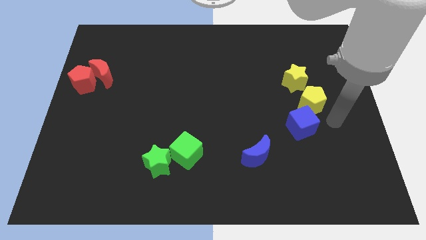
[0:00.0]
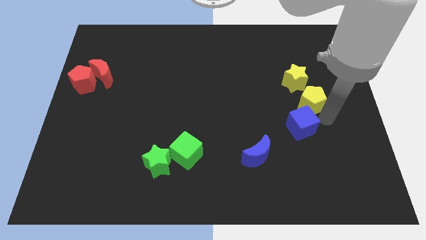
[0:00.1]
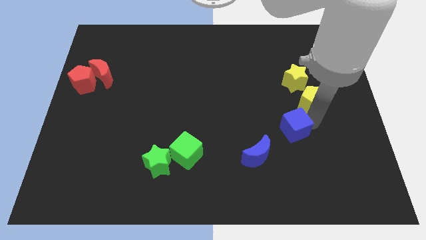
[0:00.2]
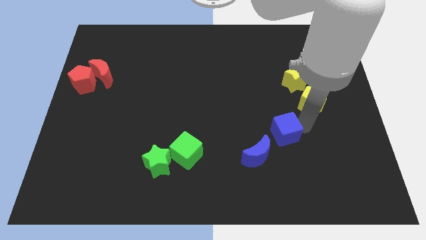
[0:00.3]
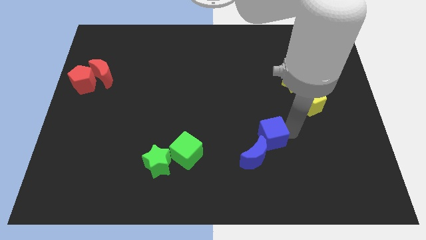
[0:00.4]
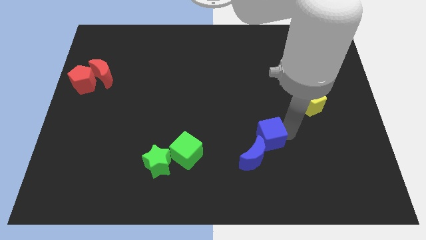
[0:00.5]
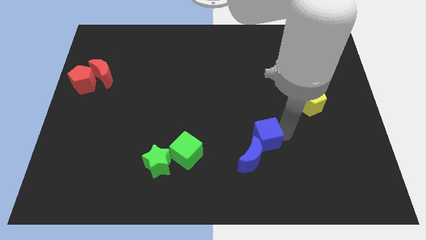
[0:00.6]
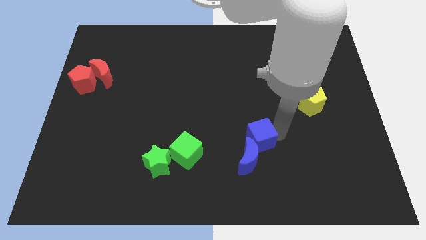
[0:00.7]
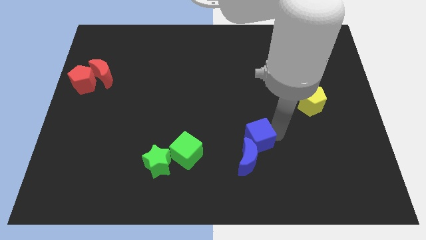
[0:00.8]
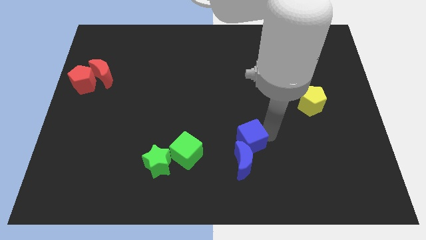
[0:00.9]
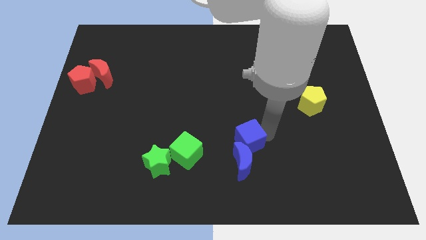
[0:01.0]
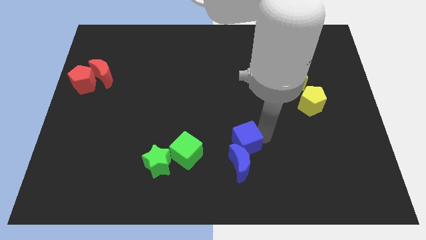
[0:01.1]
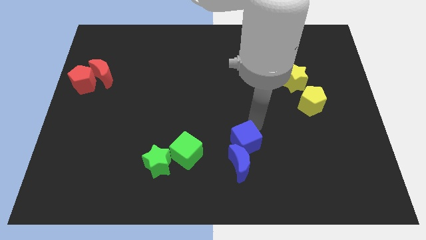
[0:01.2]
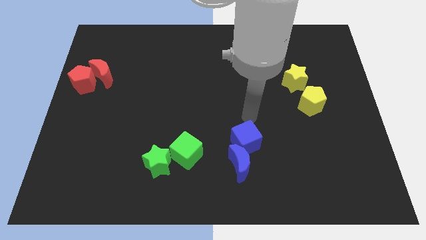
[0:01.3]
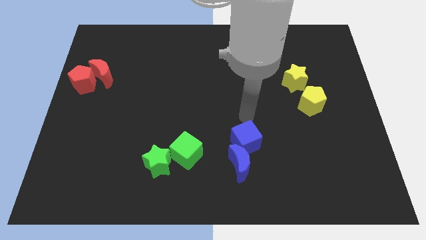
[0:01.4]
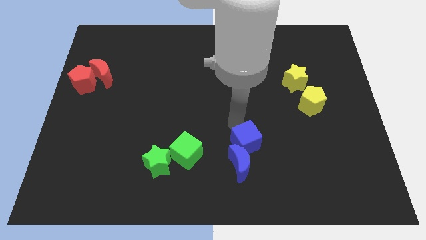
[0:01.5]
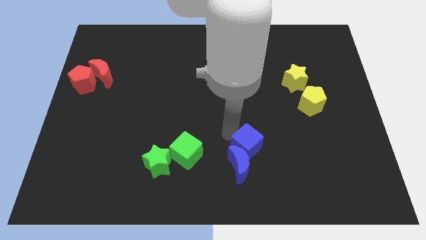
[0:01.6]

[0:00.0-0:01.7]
group up the blue blocks adjacent to the group of green blocks

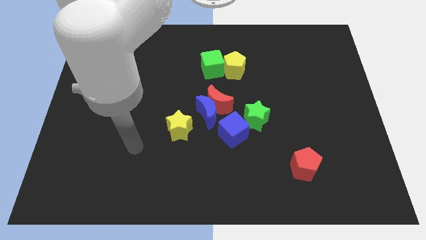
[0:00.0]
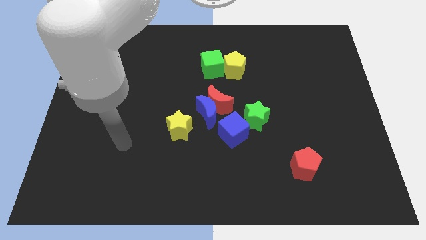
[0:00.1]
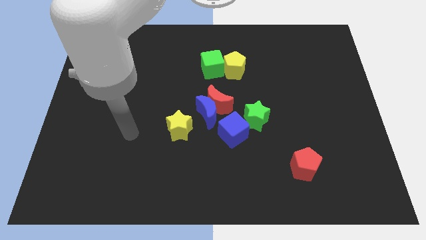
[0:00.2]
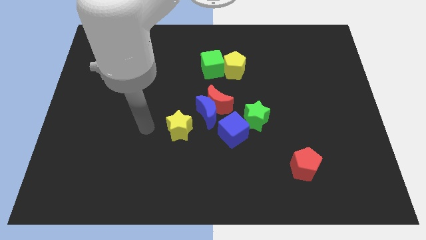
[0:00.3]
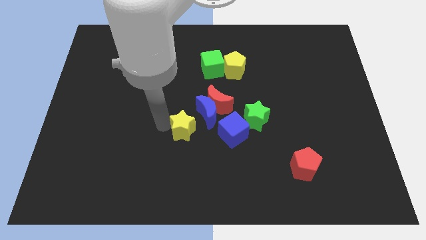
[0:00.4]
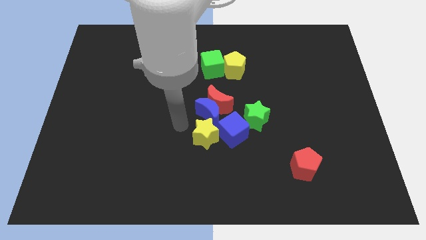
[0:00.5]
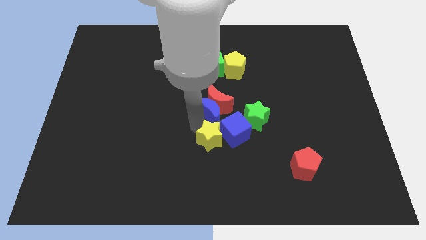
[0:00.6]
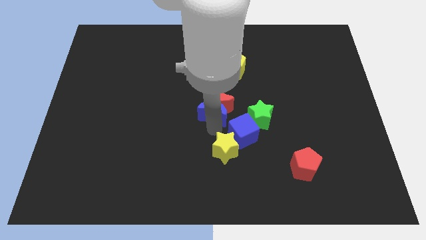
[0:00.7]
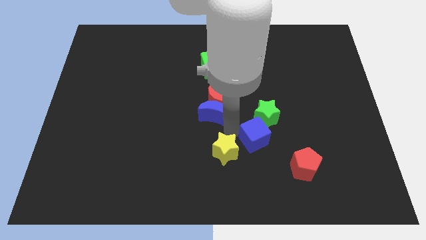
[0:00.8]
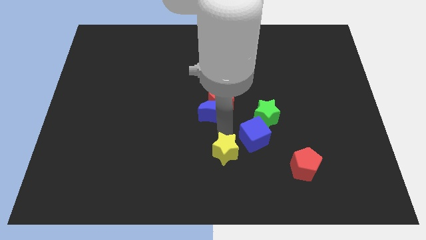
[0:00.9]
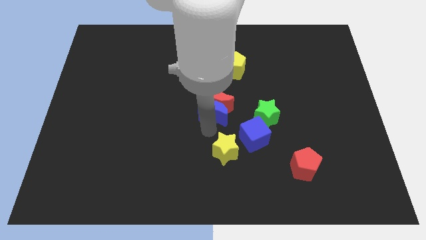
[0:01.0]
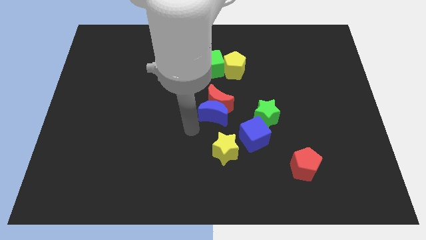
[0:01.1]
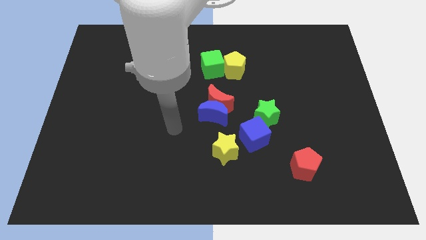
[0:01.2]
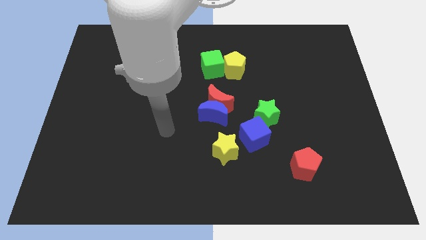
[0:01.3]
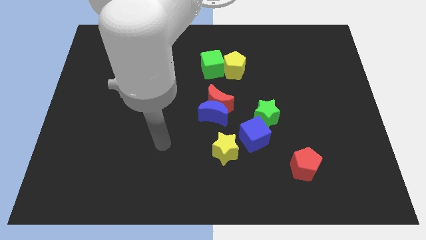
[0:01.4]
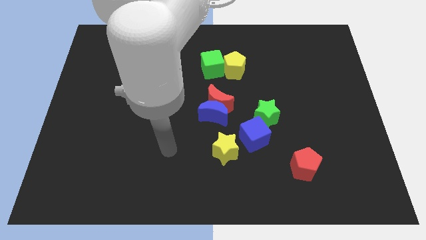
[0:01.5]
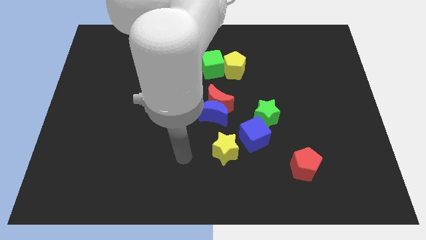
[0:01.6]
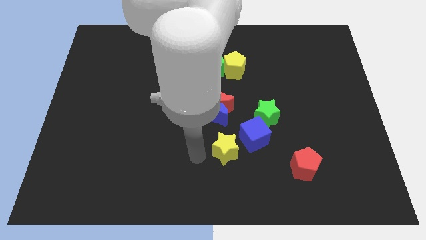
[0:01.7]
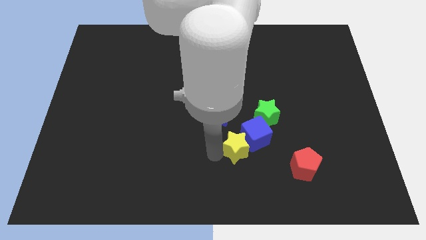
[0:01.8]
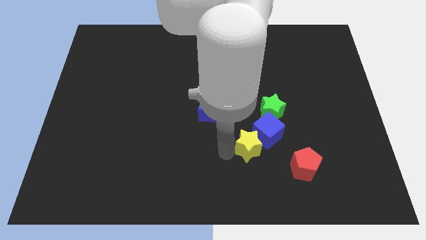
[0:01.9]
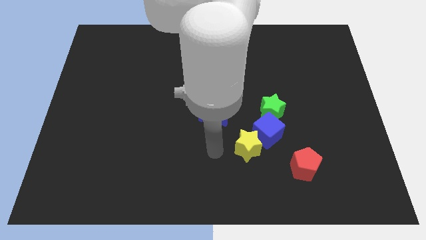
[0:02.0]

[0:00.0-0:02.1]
move the yellow star away from the blue crescent

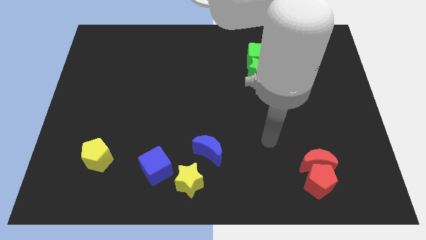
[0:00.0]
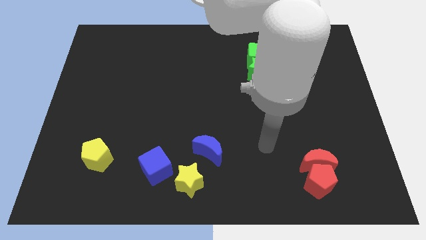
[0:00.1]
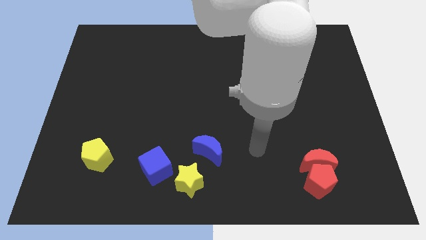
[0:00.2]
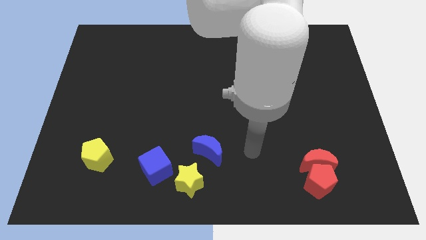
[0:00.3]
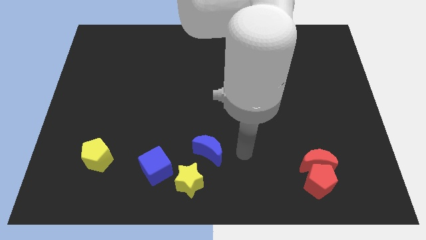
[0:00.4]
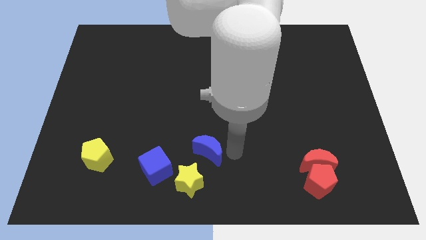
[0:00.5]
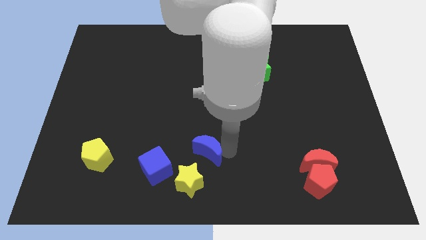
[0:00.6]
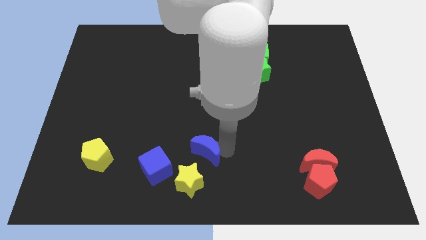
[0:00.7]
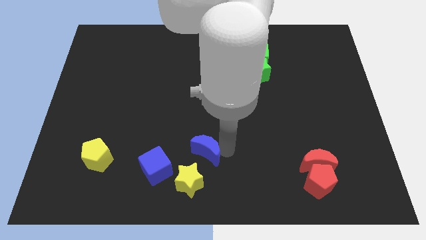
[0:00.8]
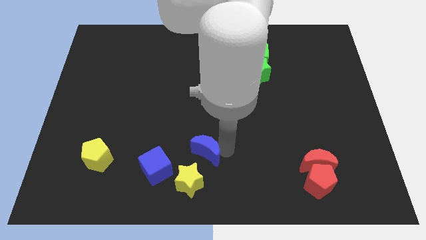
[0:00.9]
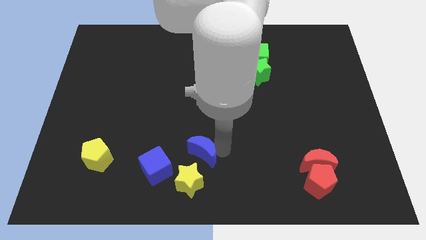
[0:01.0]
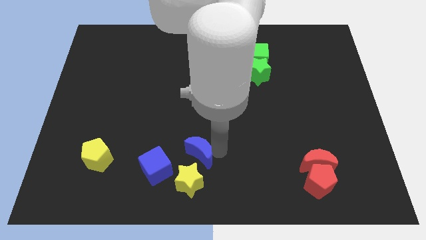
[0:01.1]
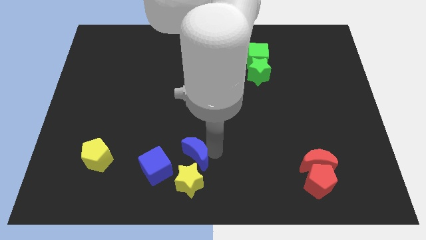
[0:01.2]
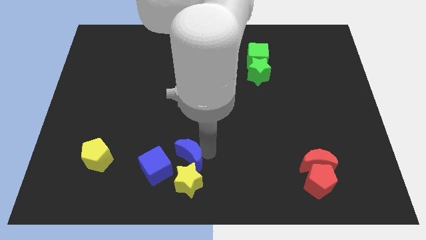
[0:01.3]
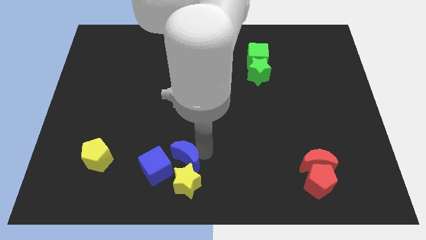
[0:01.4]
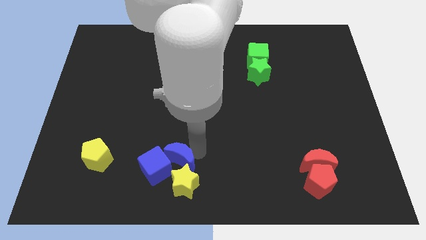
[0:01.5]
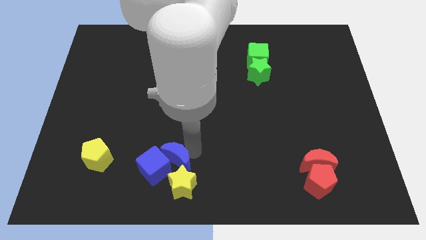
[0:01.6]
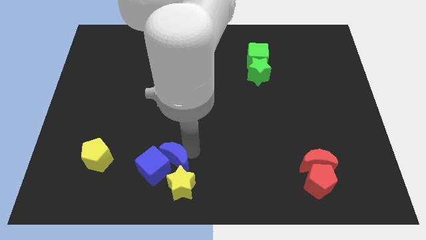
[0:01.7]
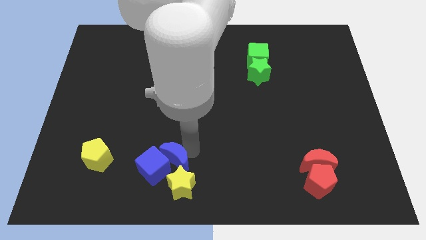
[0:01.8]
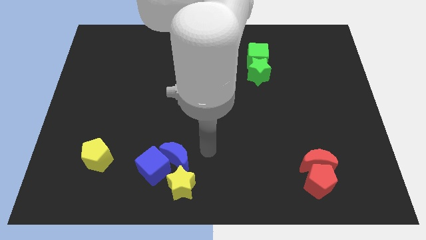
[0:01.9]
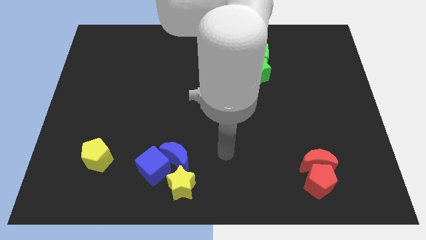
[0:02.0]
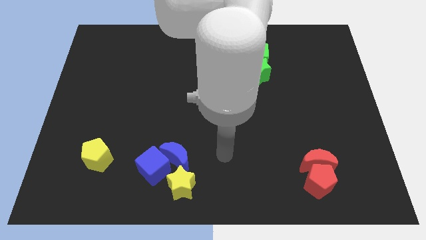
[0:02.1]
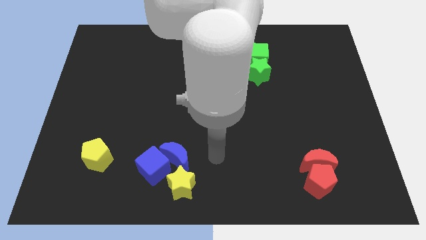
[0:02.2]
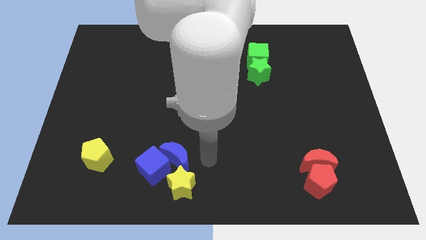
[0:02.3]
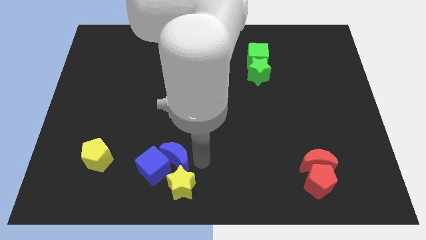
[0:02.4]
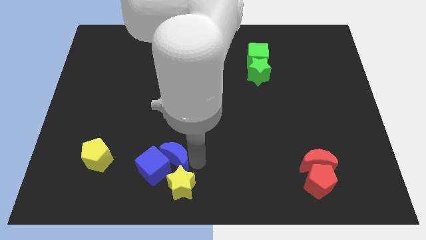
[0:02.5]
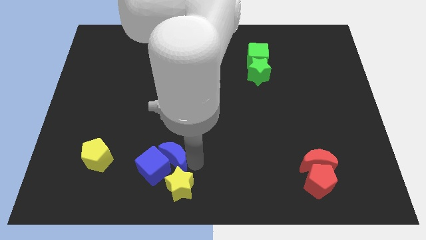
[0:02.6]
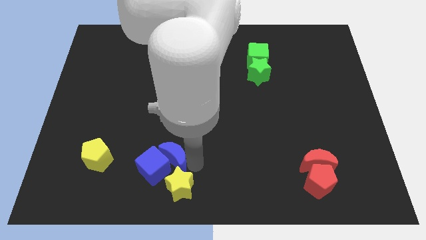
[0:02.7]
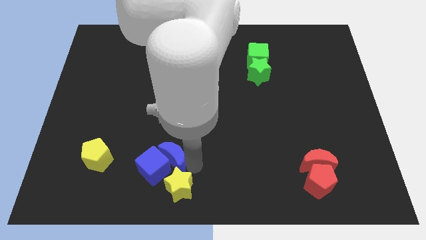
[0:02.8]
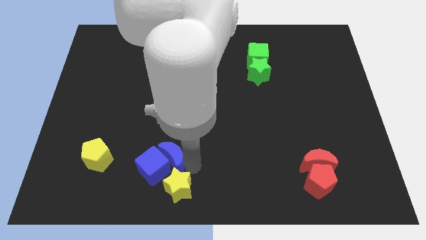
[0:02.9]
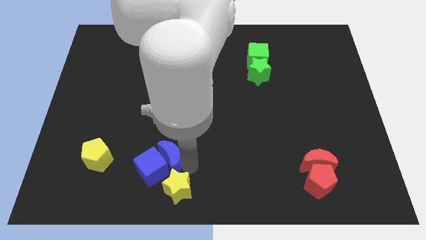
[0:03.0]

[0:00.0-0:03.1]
place your arm on top of yellow star

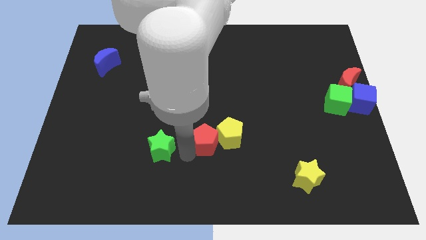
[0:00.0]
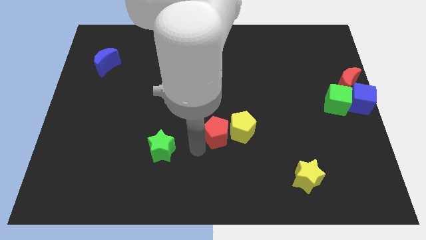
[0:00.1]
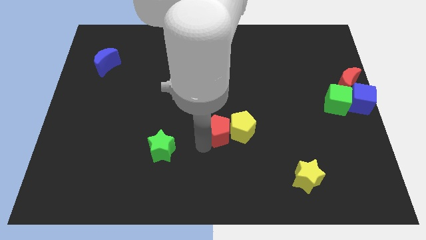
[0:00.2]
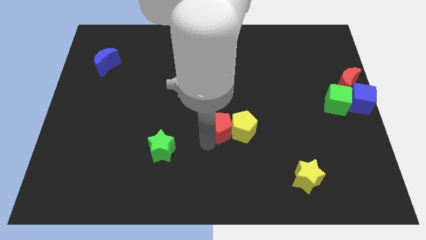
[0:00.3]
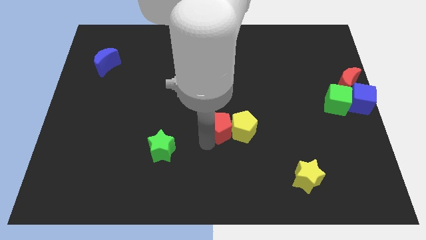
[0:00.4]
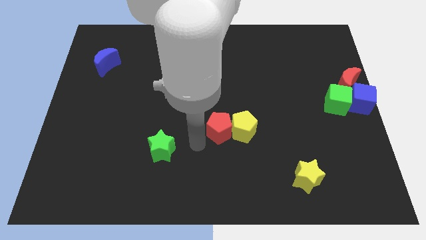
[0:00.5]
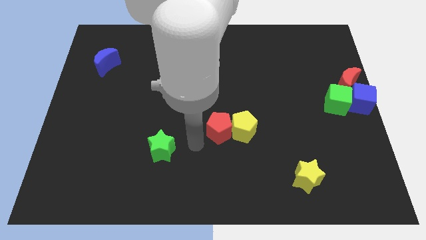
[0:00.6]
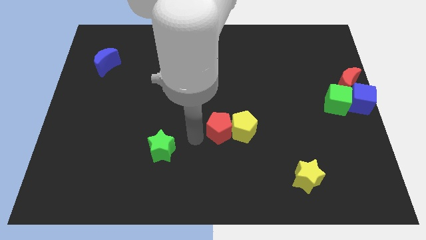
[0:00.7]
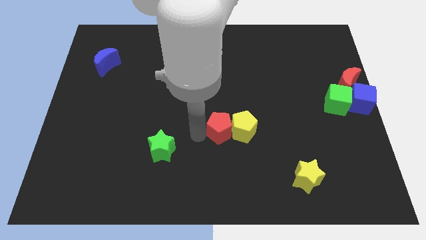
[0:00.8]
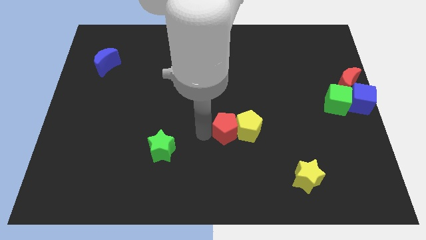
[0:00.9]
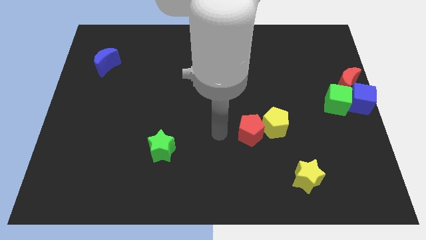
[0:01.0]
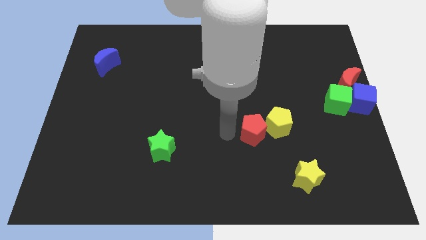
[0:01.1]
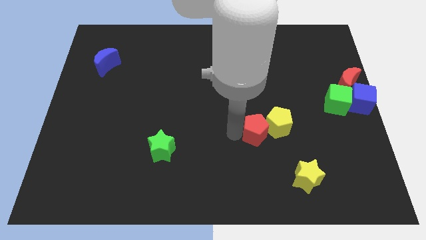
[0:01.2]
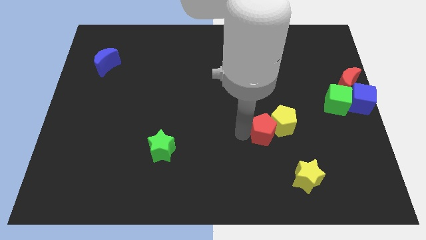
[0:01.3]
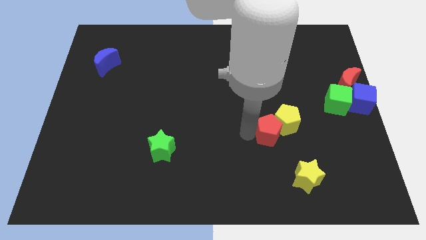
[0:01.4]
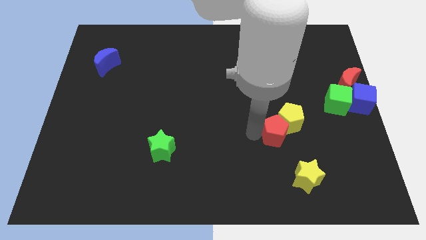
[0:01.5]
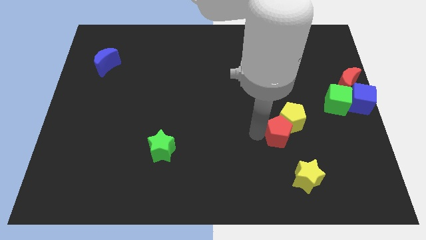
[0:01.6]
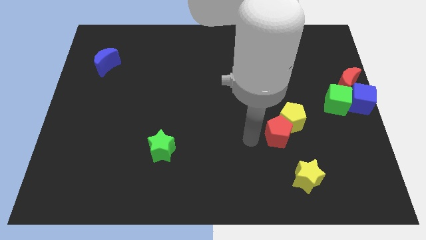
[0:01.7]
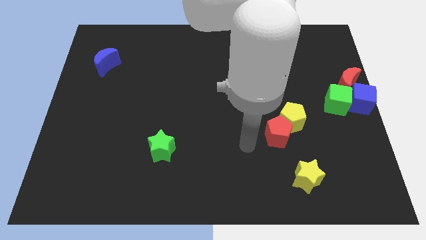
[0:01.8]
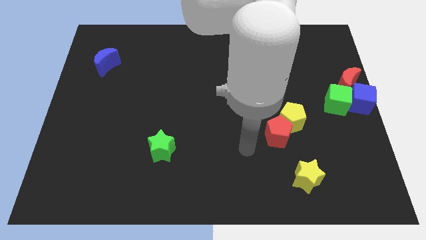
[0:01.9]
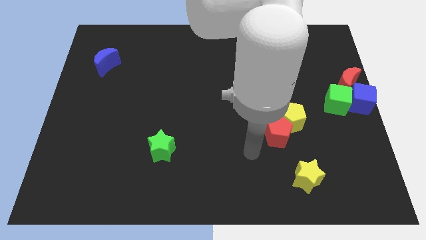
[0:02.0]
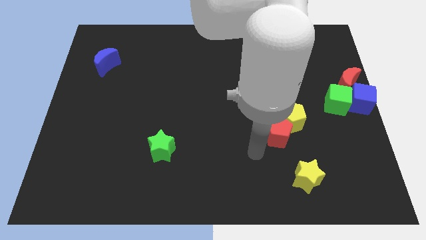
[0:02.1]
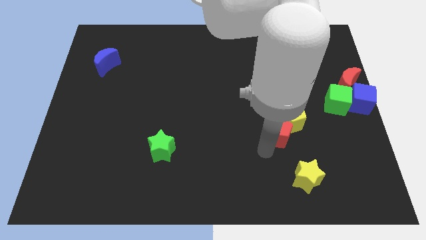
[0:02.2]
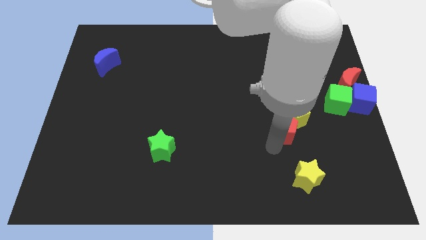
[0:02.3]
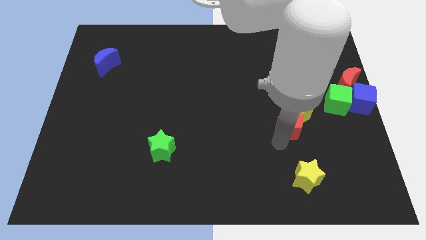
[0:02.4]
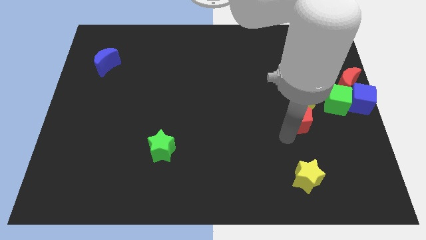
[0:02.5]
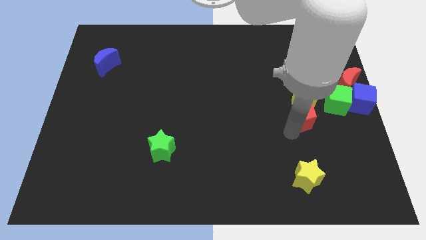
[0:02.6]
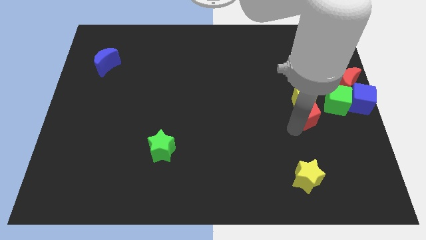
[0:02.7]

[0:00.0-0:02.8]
place red and yellow pentagons vertically above yellow star
